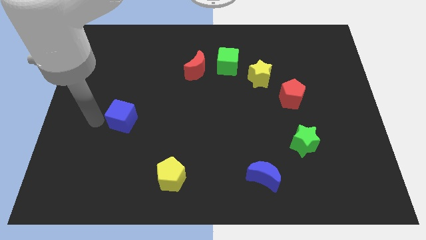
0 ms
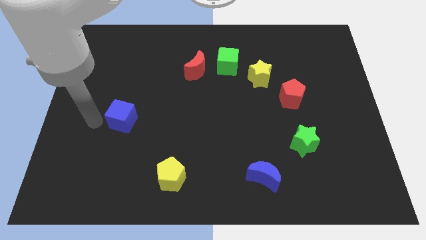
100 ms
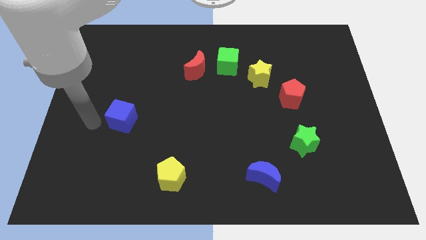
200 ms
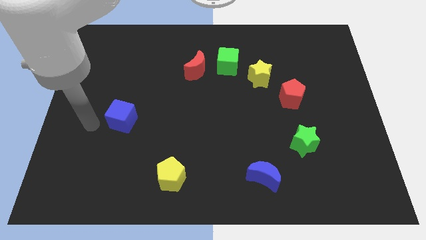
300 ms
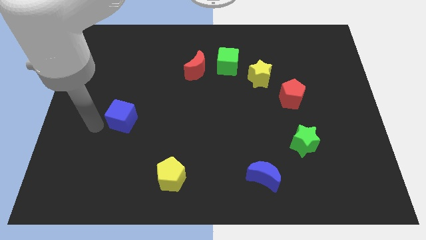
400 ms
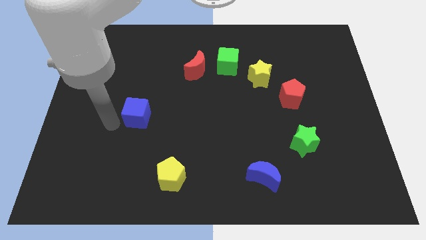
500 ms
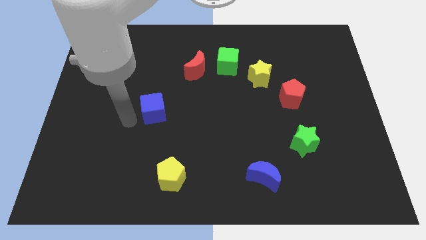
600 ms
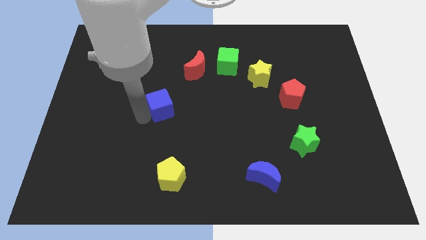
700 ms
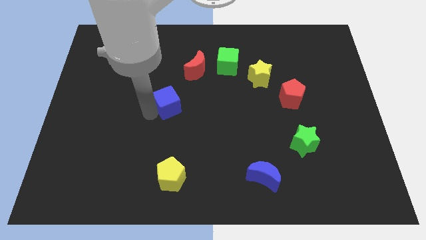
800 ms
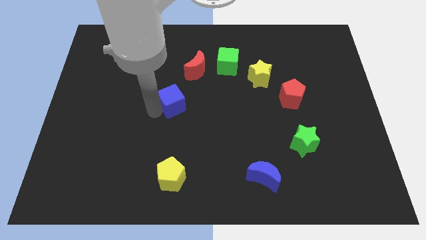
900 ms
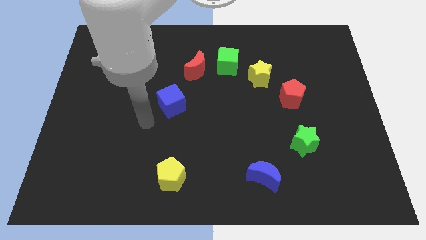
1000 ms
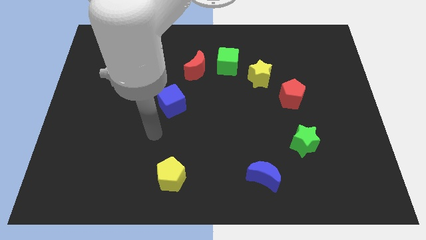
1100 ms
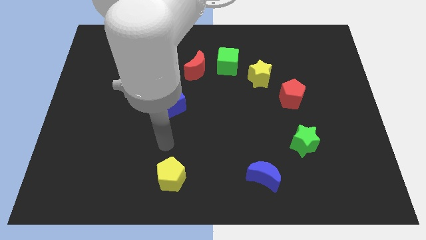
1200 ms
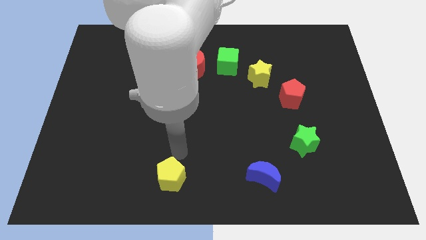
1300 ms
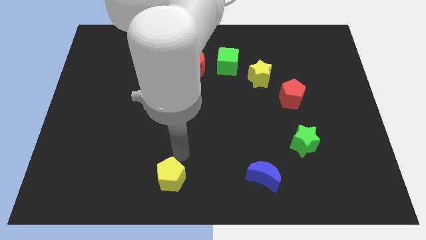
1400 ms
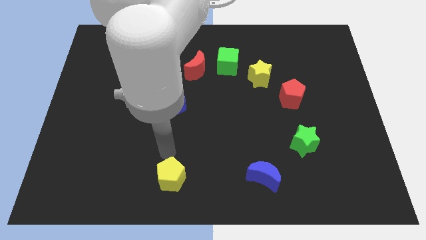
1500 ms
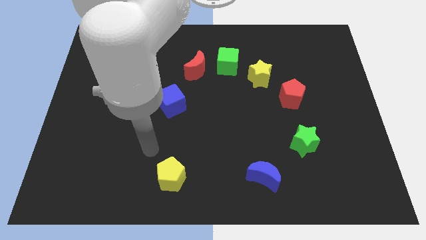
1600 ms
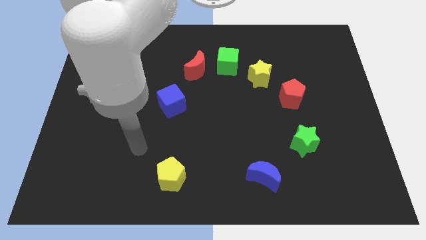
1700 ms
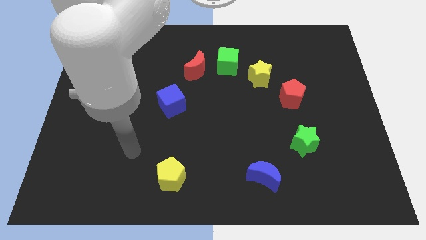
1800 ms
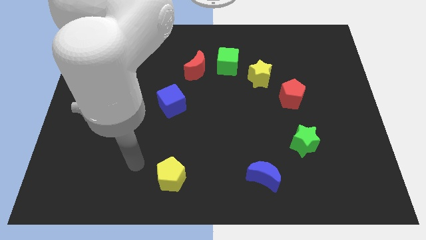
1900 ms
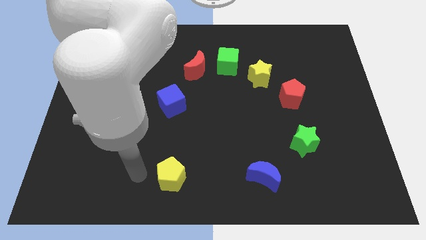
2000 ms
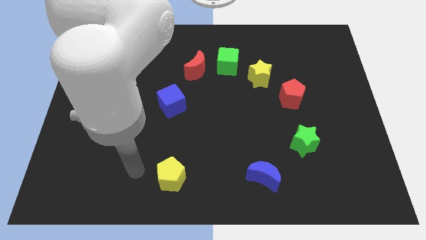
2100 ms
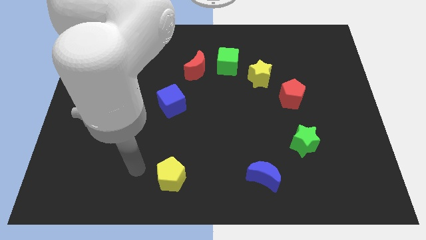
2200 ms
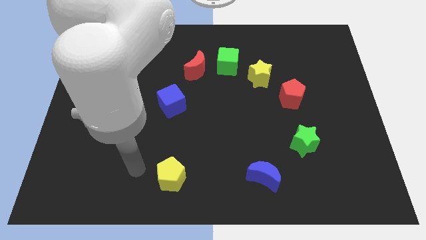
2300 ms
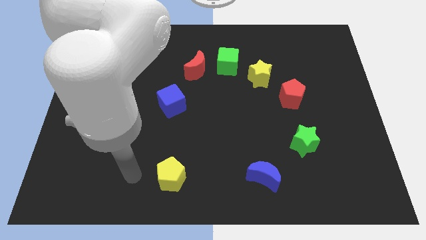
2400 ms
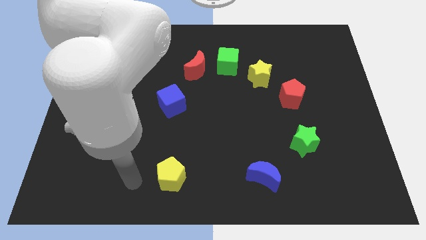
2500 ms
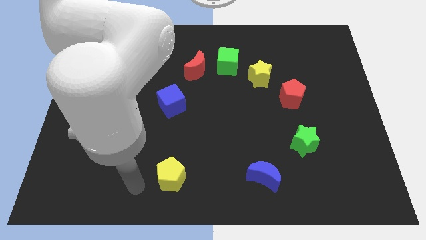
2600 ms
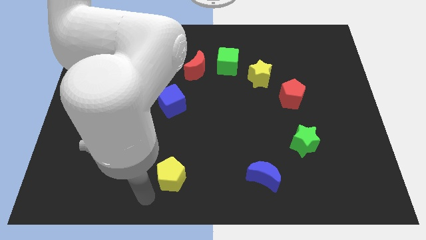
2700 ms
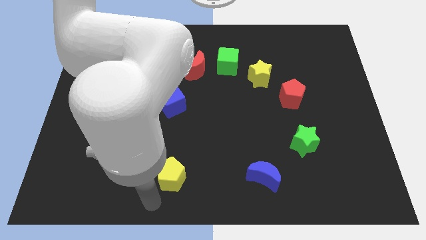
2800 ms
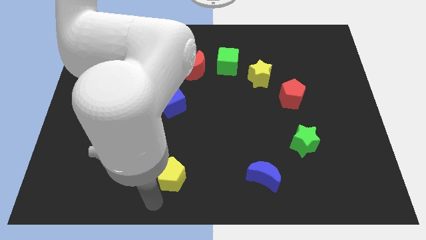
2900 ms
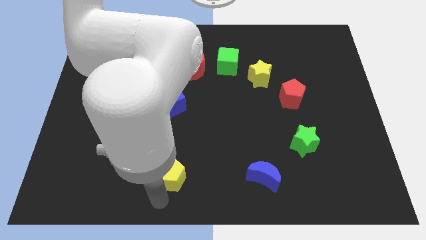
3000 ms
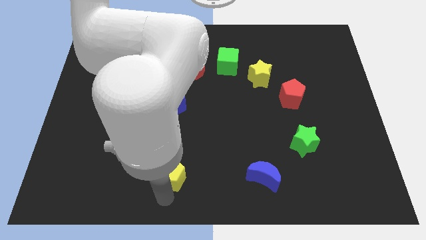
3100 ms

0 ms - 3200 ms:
place your arm below yellow pentagon

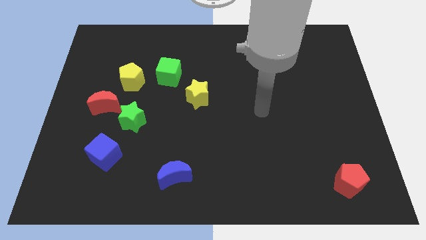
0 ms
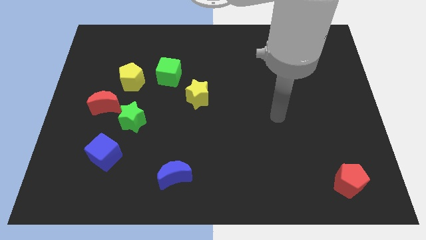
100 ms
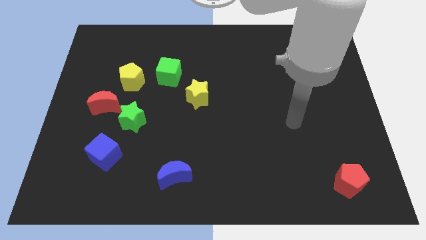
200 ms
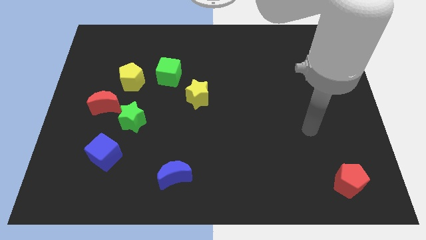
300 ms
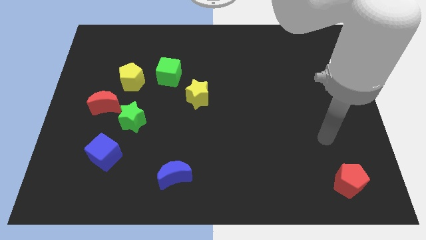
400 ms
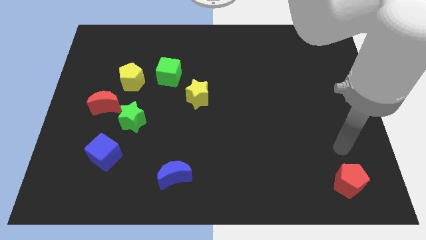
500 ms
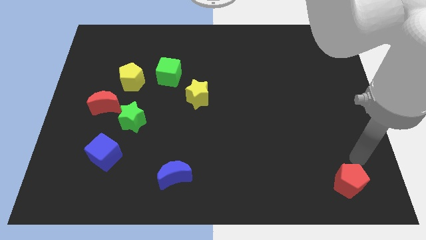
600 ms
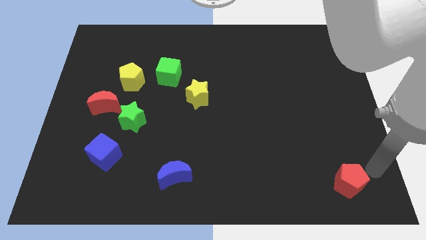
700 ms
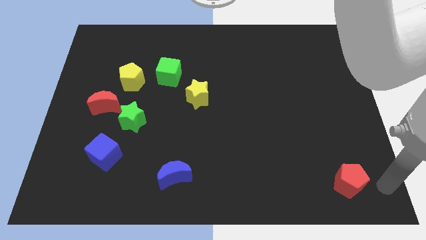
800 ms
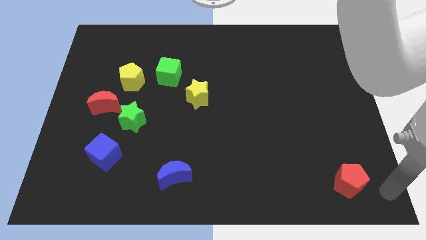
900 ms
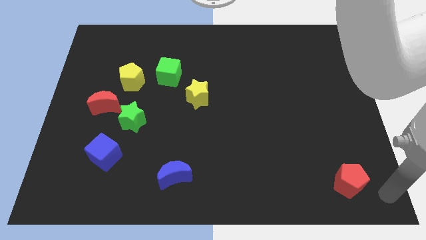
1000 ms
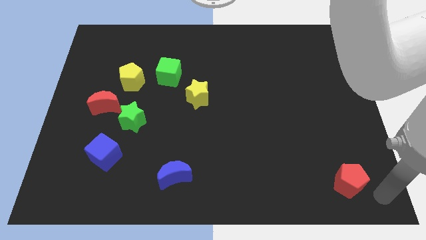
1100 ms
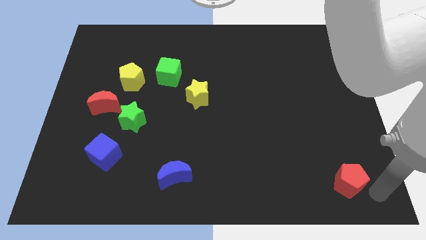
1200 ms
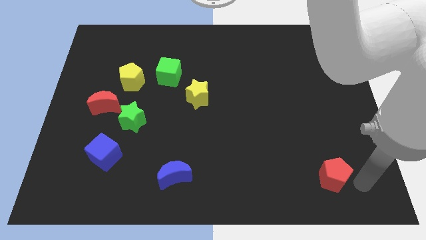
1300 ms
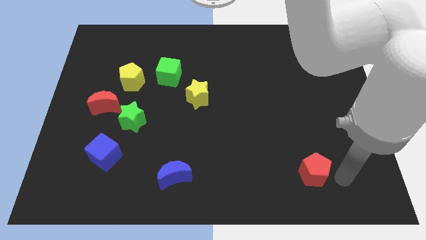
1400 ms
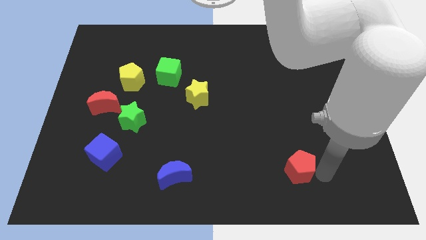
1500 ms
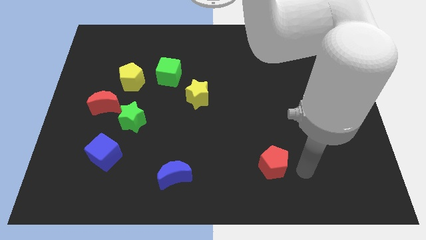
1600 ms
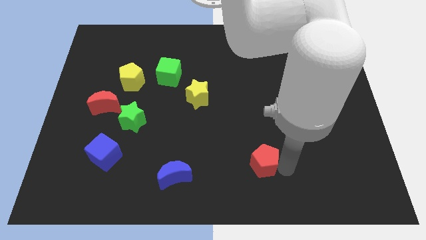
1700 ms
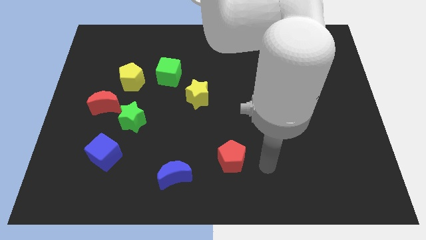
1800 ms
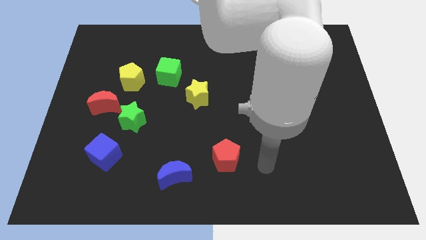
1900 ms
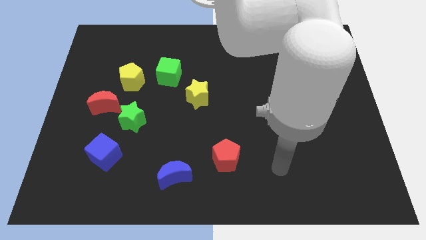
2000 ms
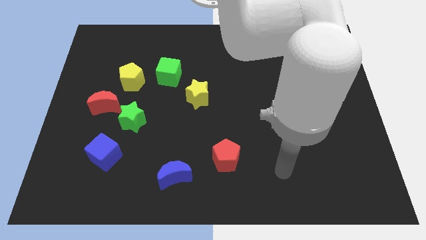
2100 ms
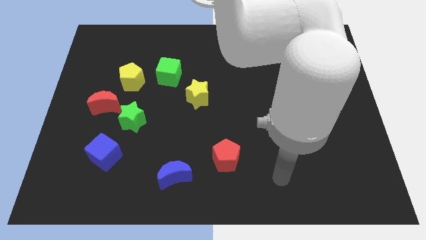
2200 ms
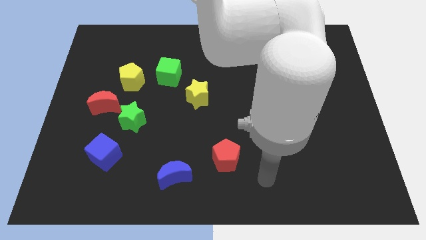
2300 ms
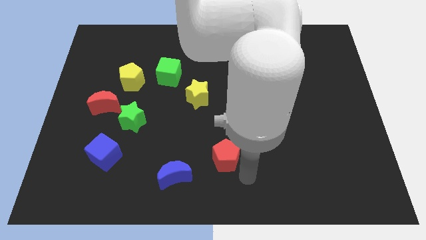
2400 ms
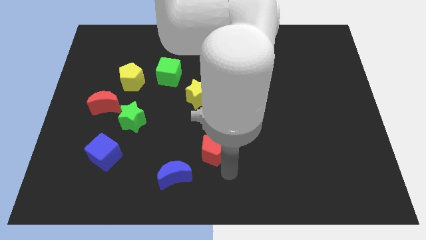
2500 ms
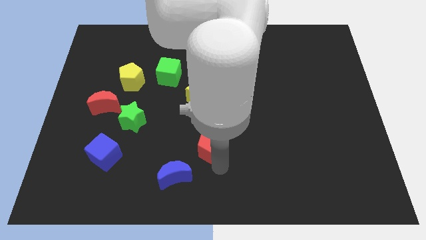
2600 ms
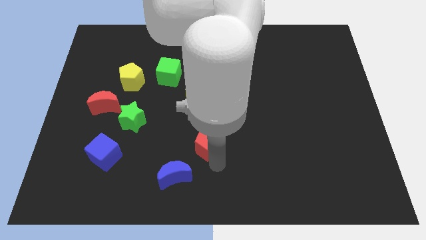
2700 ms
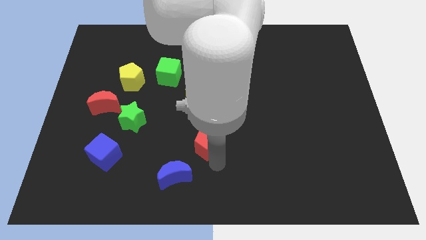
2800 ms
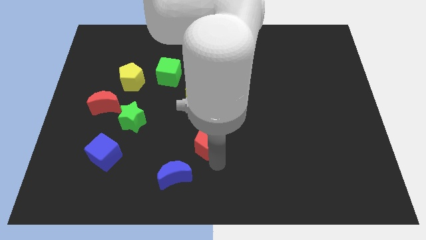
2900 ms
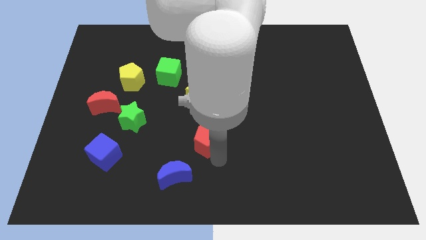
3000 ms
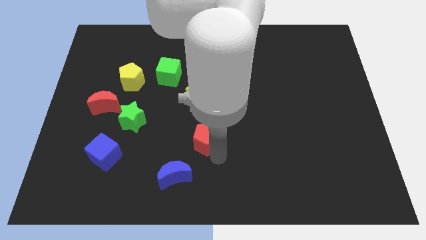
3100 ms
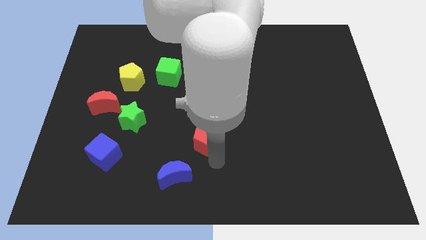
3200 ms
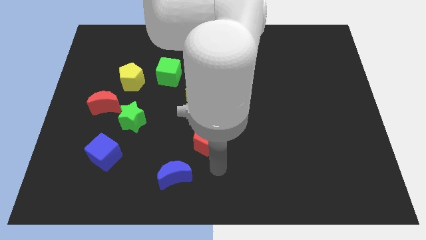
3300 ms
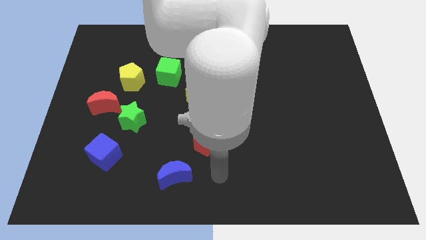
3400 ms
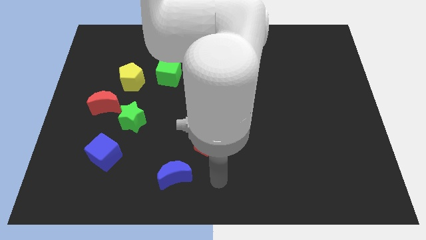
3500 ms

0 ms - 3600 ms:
place the red pentagon below the yellow star

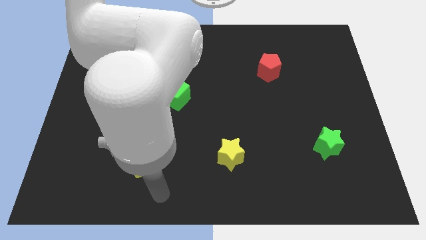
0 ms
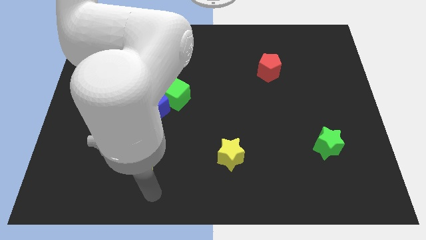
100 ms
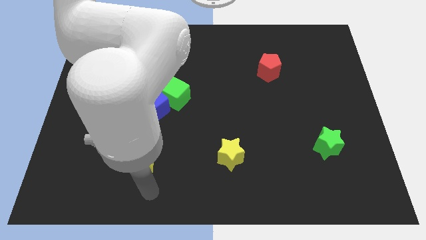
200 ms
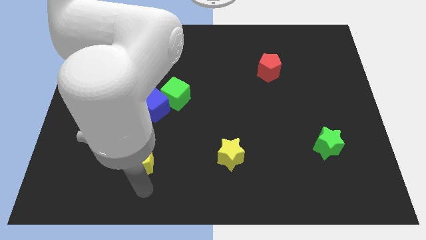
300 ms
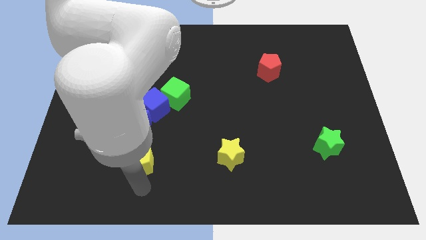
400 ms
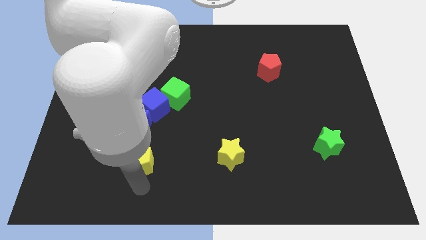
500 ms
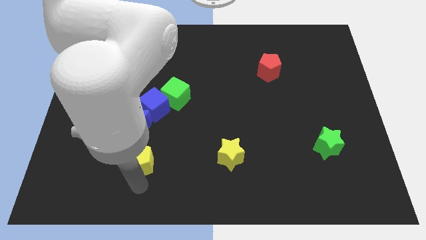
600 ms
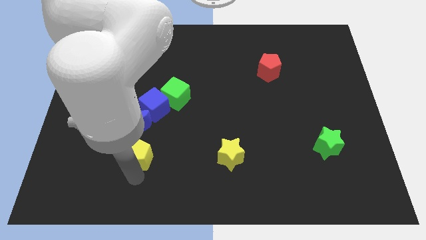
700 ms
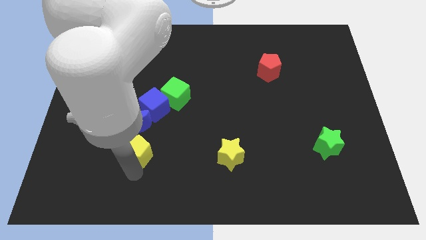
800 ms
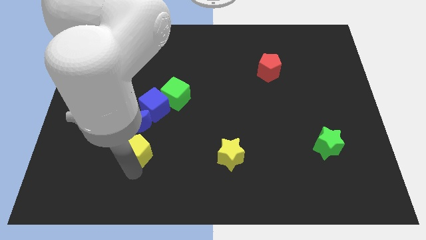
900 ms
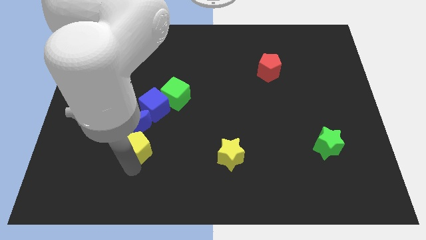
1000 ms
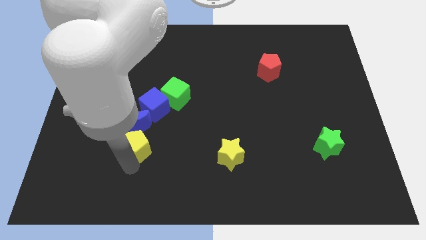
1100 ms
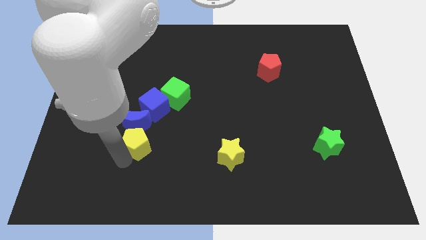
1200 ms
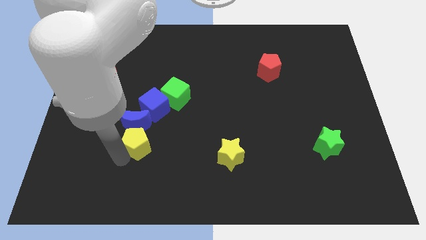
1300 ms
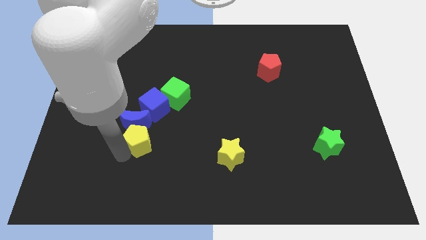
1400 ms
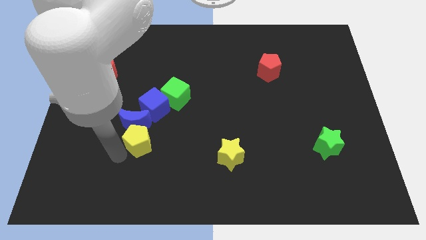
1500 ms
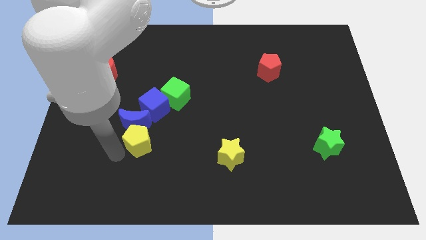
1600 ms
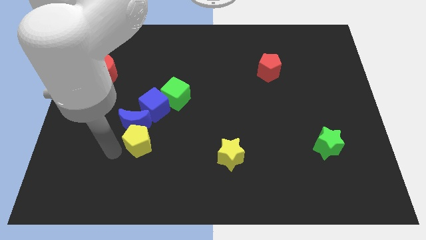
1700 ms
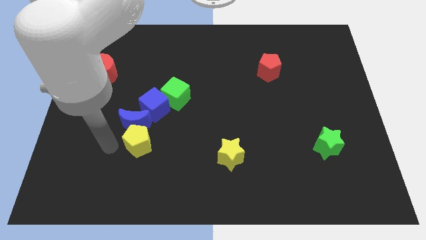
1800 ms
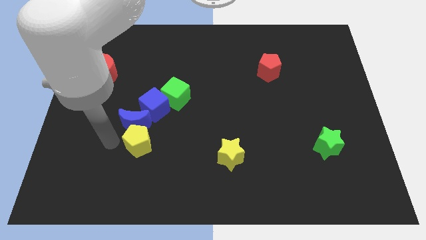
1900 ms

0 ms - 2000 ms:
move the yellow pentagon below the blue crescent

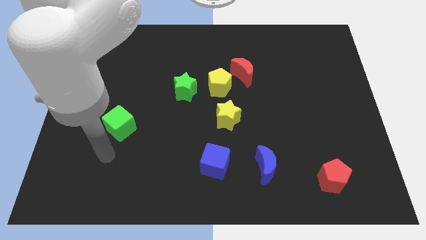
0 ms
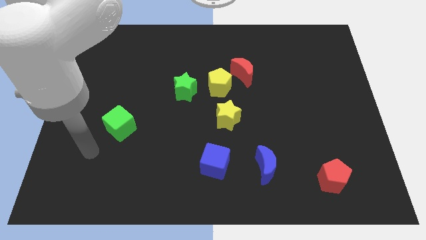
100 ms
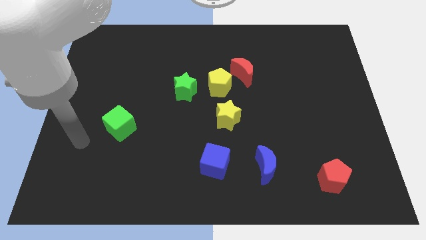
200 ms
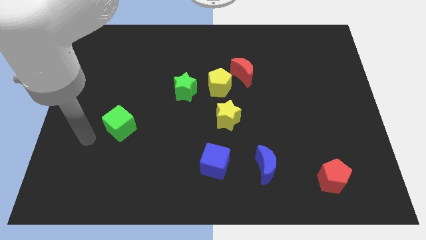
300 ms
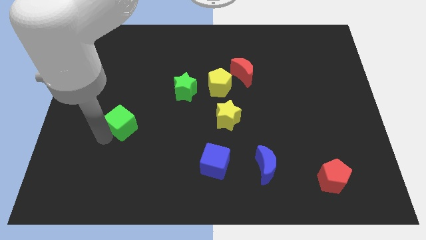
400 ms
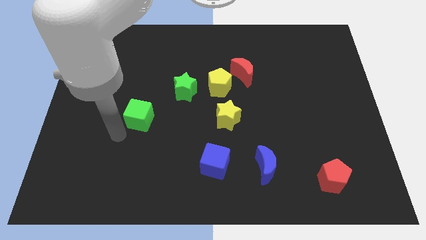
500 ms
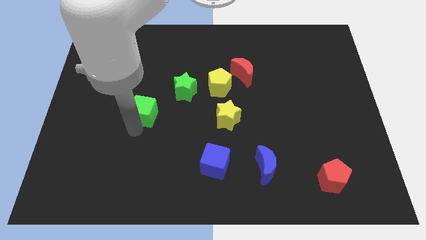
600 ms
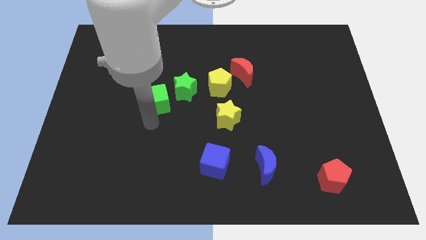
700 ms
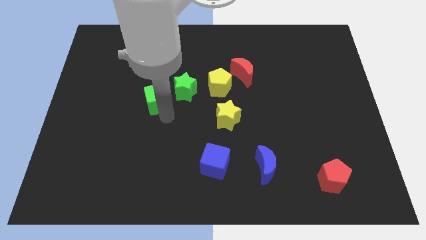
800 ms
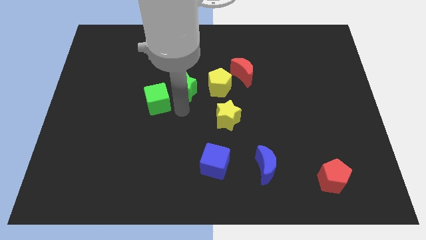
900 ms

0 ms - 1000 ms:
move the green cube towards the green star
